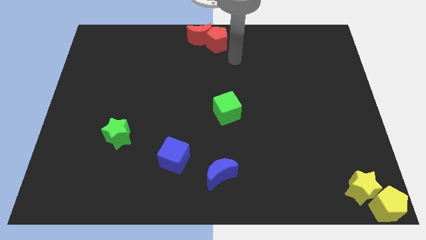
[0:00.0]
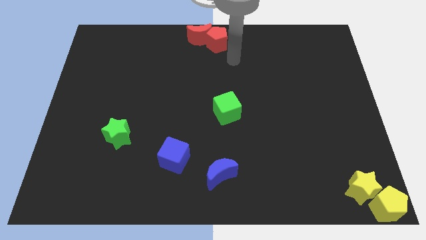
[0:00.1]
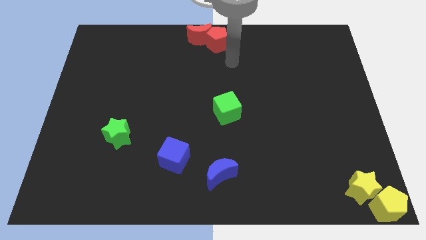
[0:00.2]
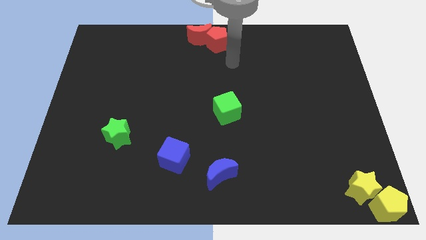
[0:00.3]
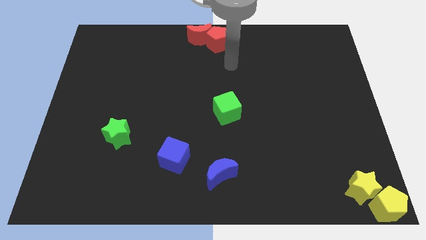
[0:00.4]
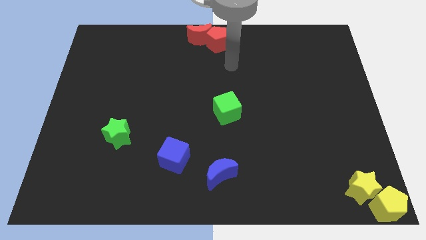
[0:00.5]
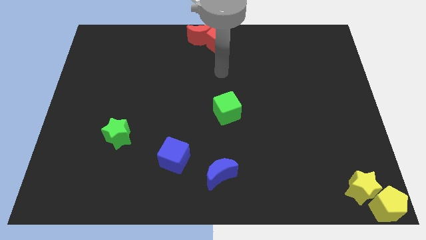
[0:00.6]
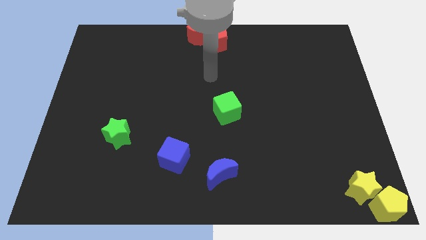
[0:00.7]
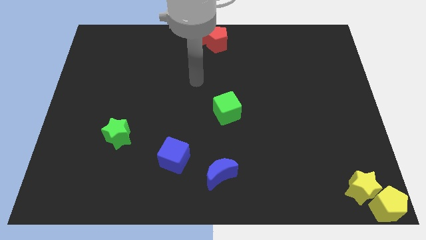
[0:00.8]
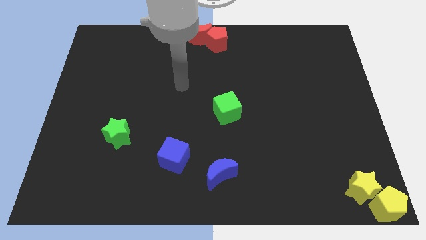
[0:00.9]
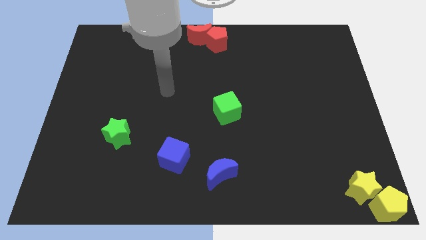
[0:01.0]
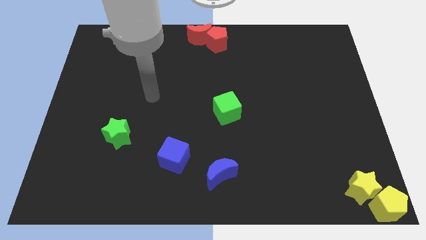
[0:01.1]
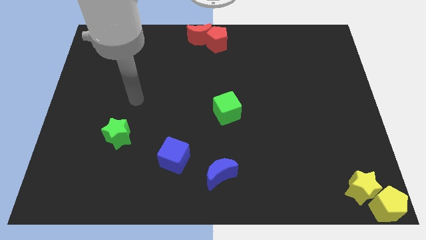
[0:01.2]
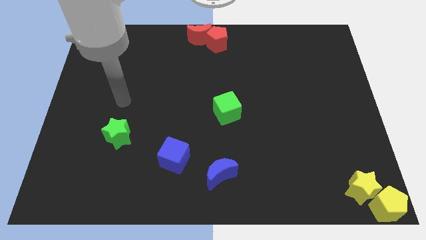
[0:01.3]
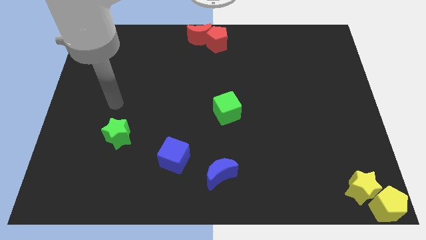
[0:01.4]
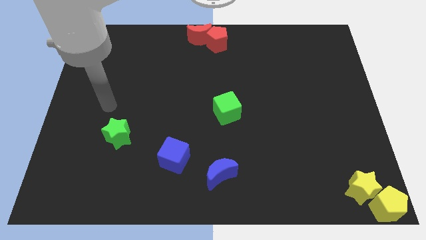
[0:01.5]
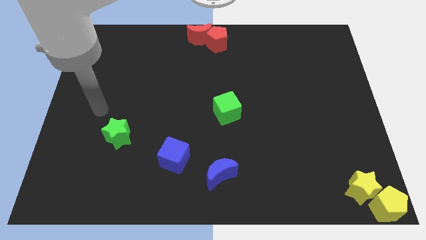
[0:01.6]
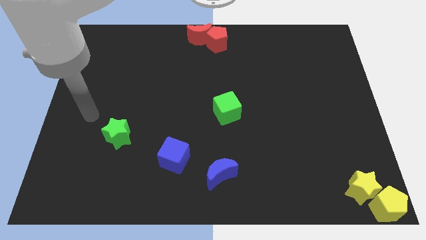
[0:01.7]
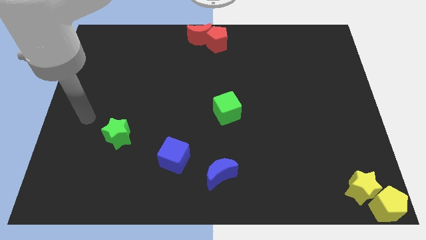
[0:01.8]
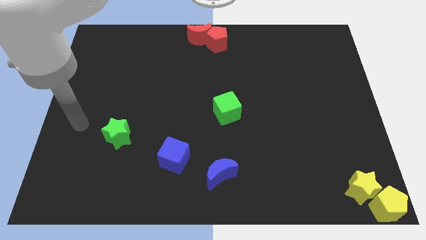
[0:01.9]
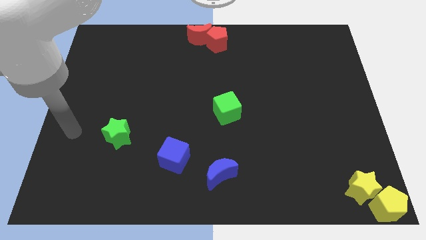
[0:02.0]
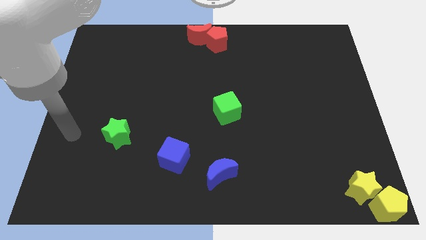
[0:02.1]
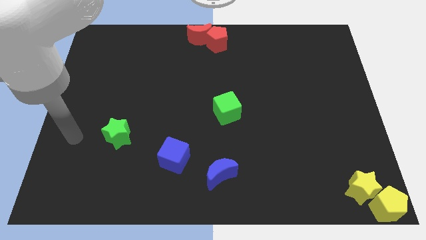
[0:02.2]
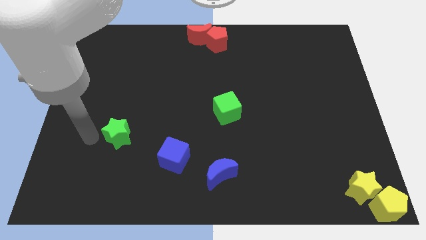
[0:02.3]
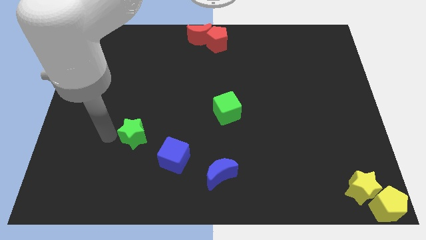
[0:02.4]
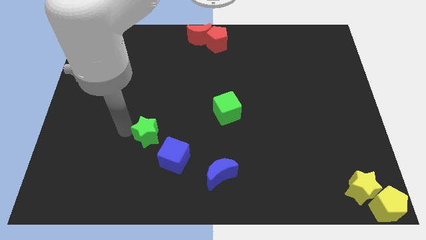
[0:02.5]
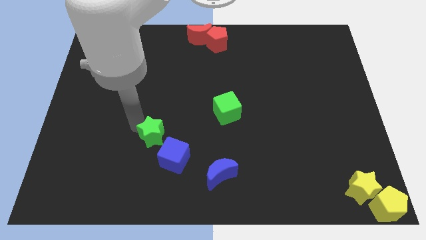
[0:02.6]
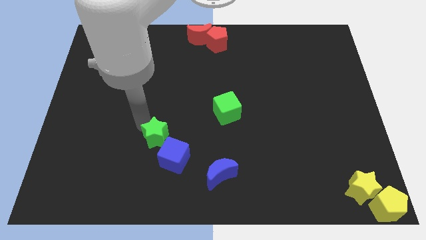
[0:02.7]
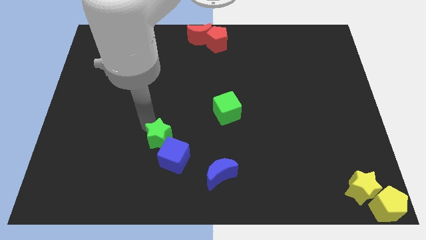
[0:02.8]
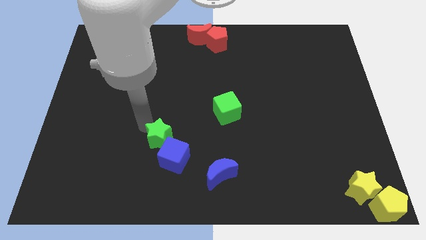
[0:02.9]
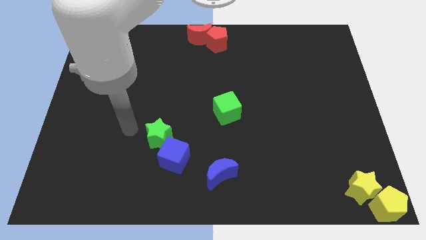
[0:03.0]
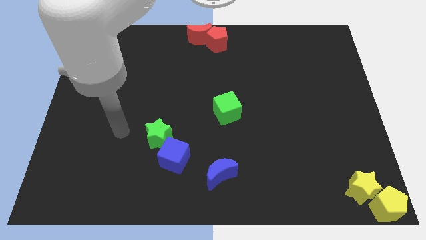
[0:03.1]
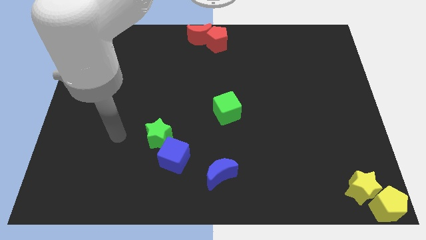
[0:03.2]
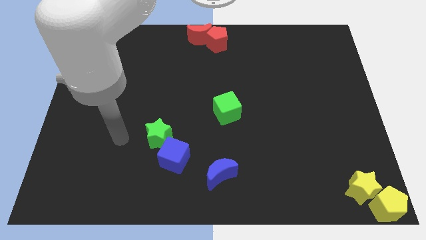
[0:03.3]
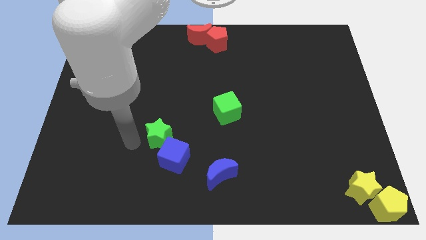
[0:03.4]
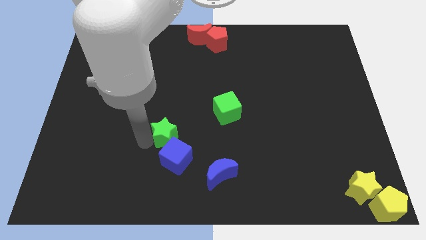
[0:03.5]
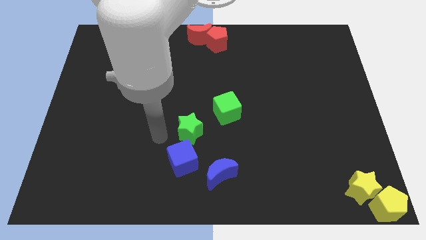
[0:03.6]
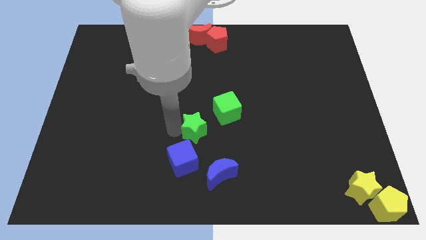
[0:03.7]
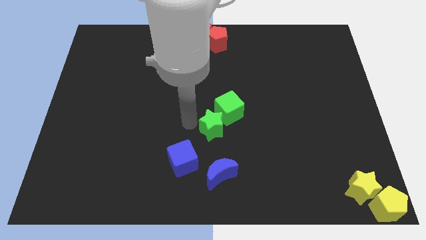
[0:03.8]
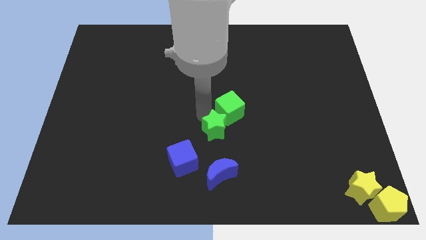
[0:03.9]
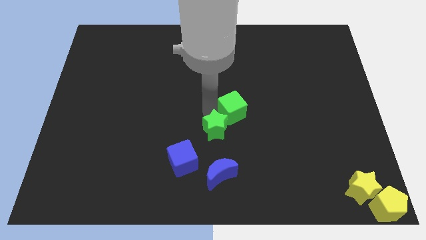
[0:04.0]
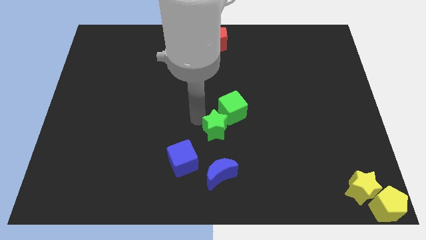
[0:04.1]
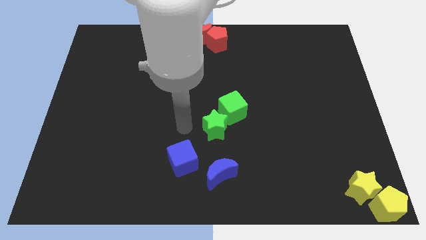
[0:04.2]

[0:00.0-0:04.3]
move the green star to the bottom left of the green cube

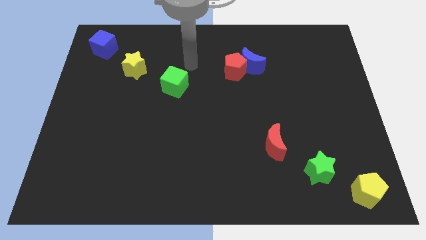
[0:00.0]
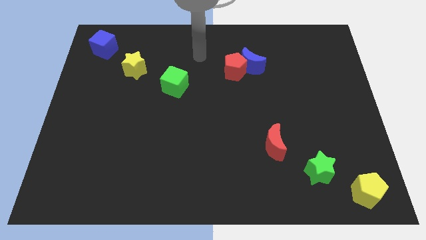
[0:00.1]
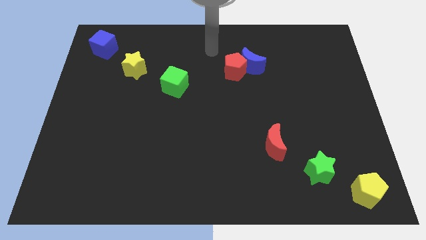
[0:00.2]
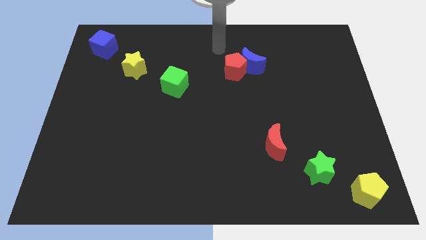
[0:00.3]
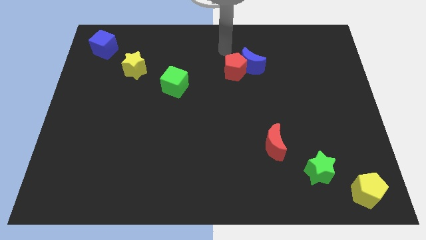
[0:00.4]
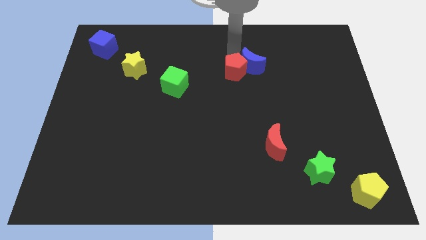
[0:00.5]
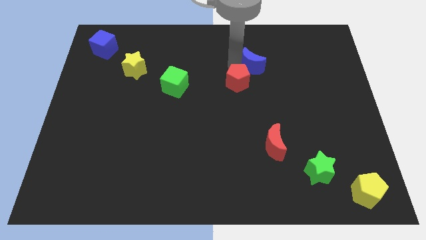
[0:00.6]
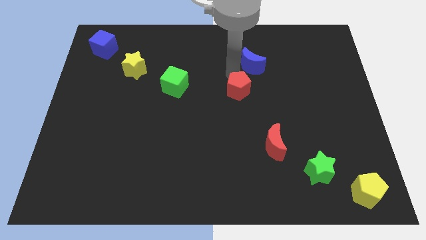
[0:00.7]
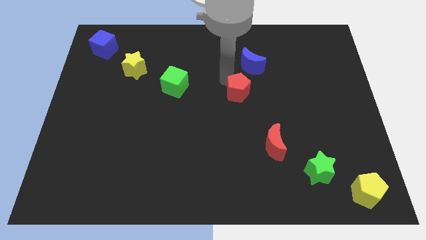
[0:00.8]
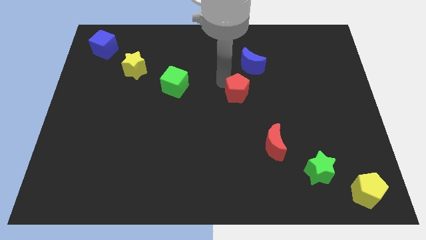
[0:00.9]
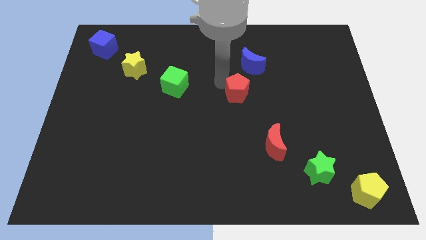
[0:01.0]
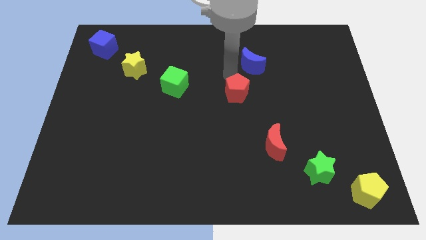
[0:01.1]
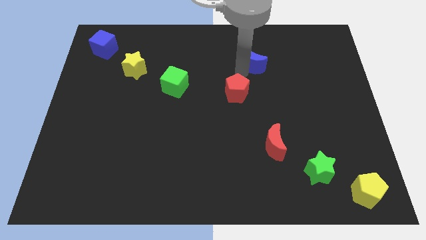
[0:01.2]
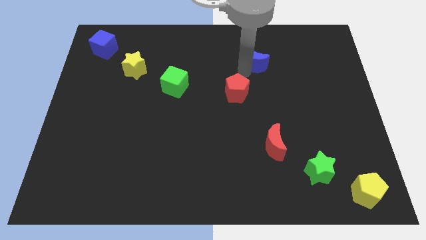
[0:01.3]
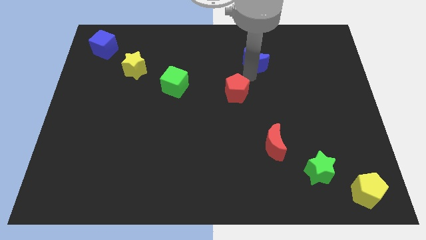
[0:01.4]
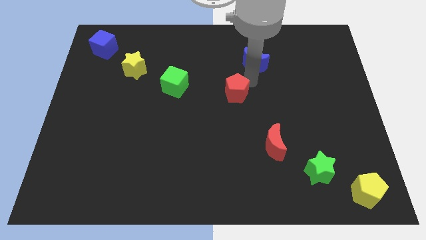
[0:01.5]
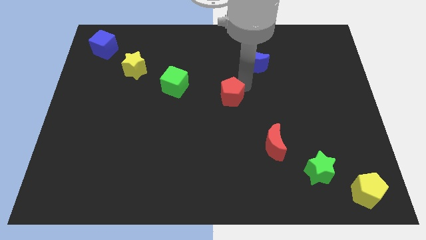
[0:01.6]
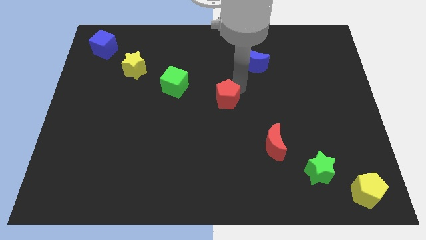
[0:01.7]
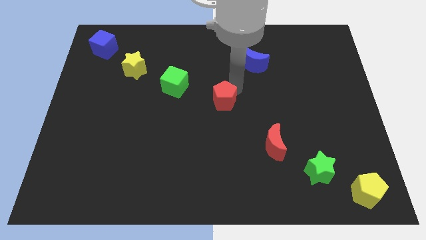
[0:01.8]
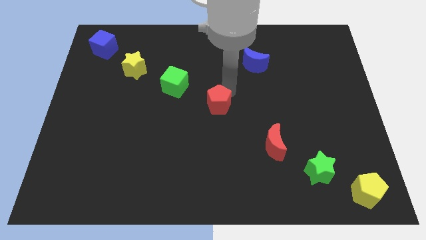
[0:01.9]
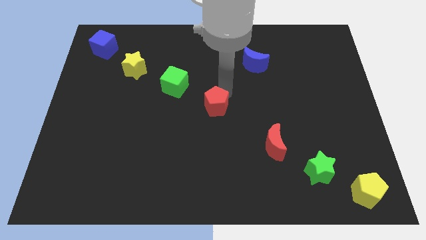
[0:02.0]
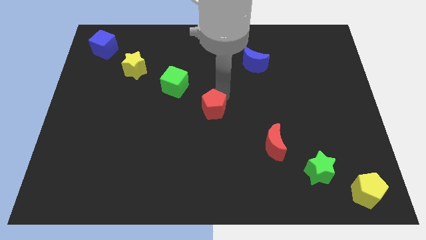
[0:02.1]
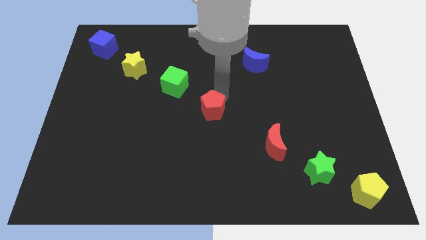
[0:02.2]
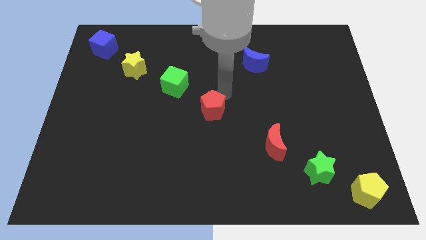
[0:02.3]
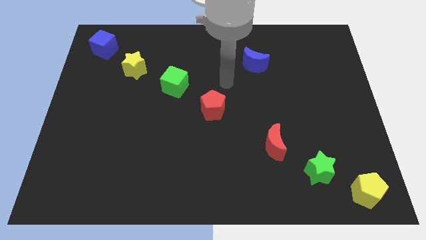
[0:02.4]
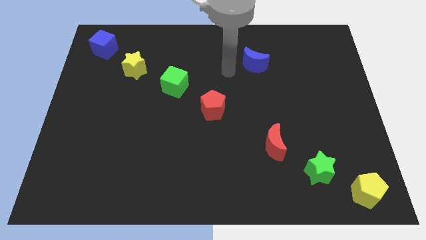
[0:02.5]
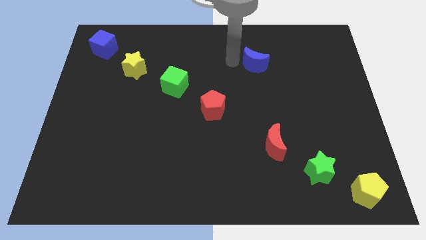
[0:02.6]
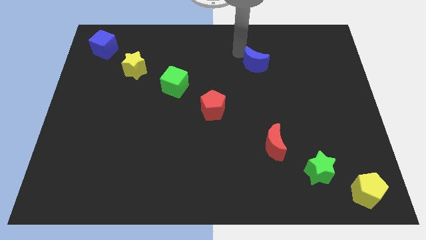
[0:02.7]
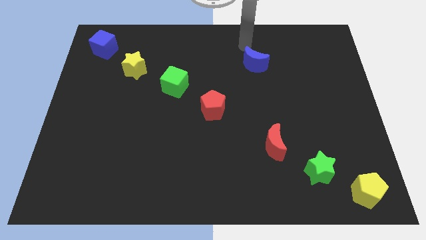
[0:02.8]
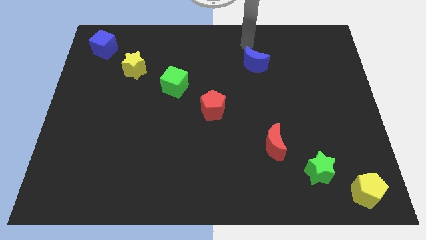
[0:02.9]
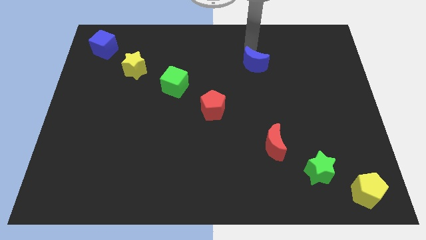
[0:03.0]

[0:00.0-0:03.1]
put the red pentagon in between the green cube and red crescent

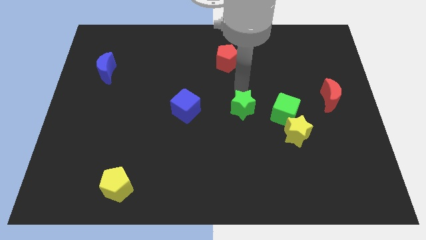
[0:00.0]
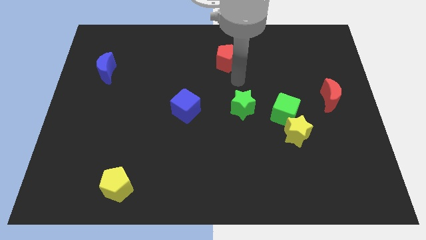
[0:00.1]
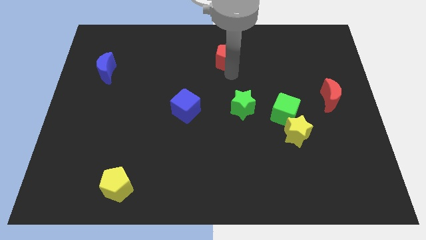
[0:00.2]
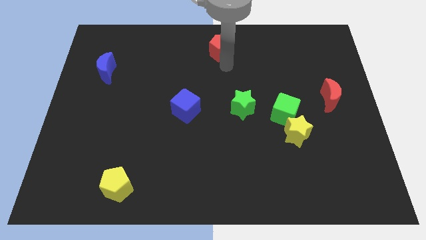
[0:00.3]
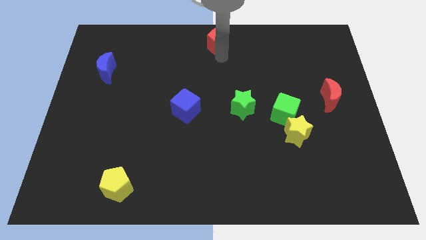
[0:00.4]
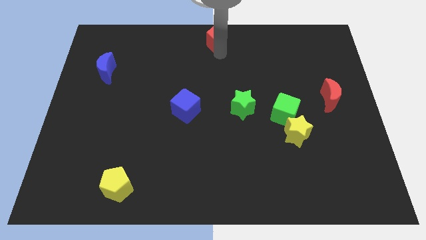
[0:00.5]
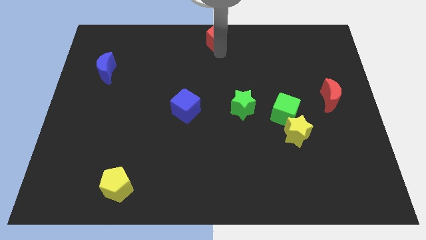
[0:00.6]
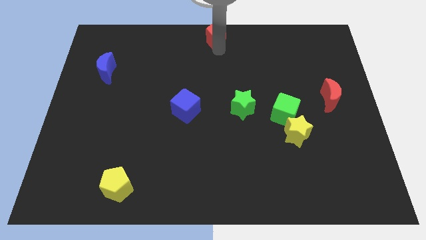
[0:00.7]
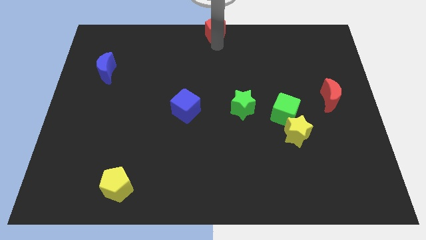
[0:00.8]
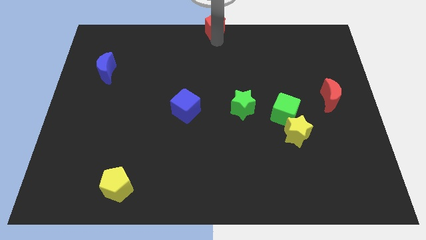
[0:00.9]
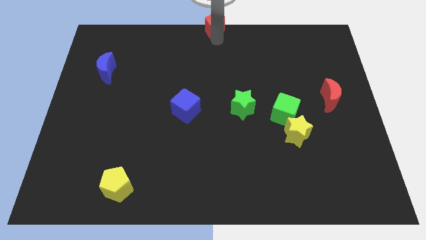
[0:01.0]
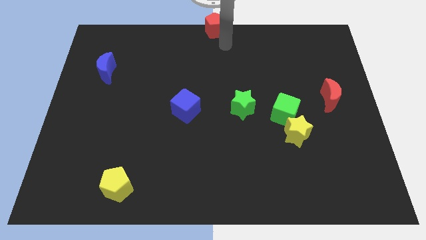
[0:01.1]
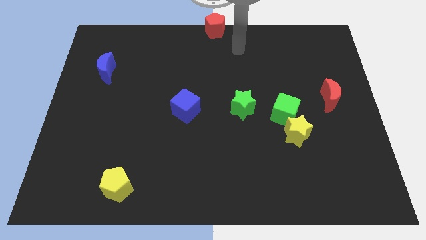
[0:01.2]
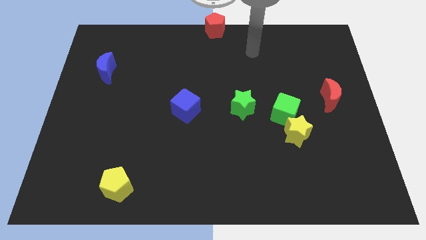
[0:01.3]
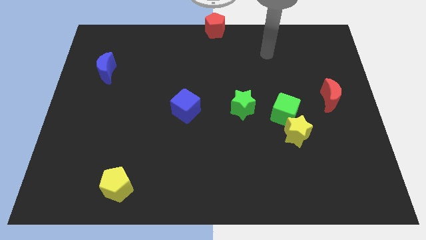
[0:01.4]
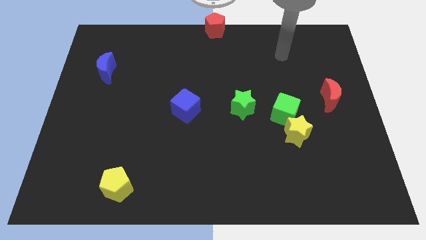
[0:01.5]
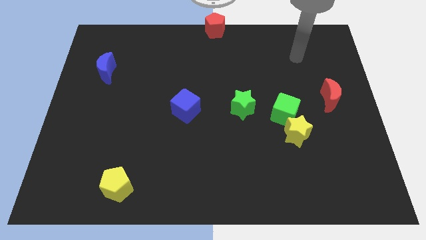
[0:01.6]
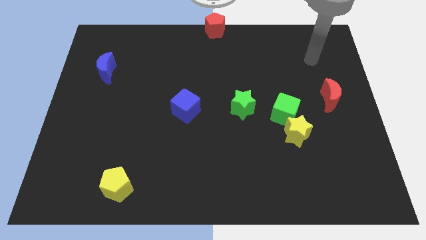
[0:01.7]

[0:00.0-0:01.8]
place the red pentagon at the top center of the board
